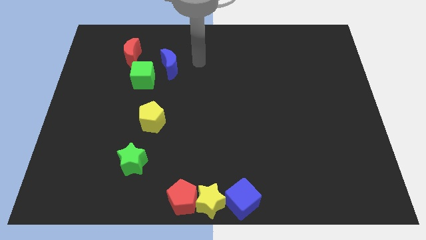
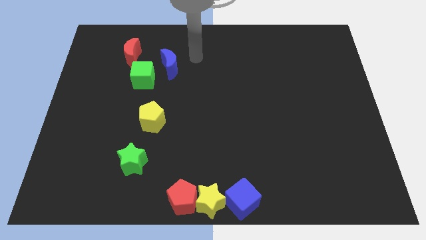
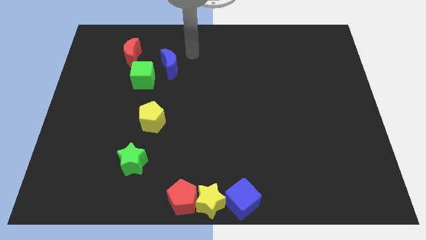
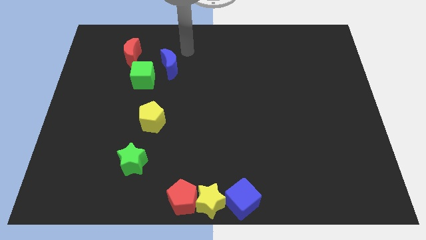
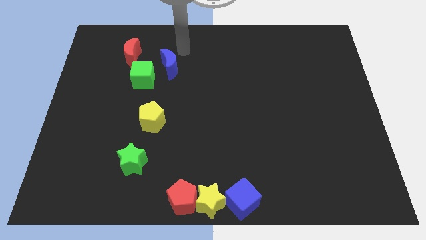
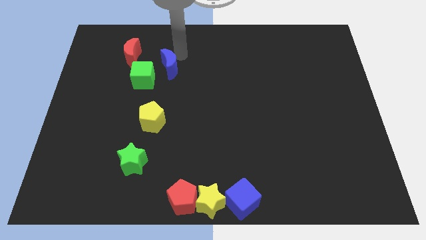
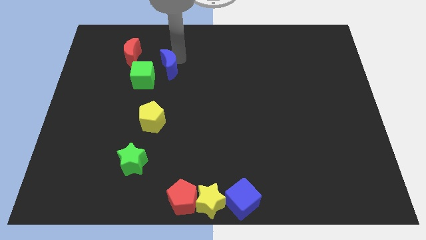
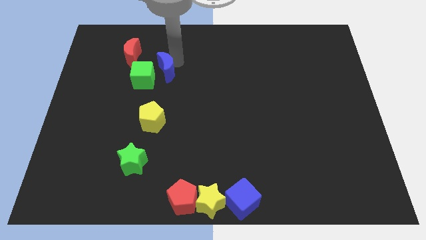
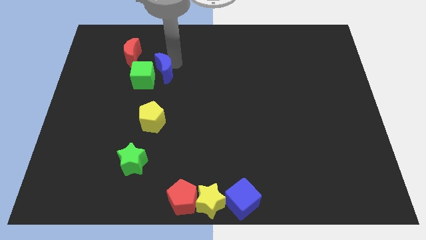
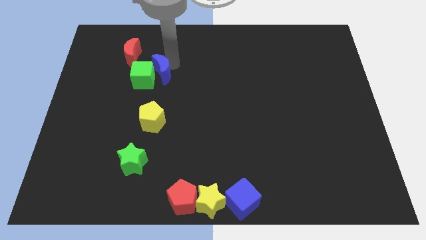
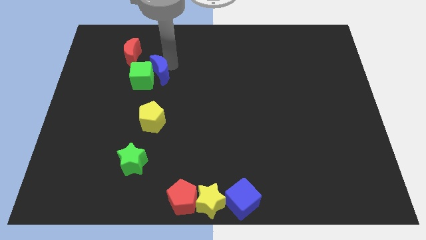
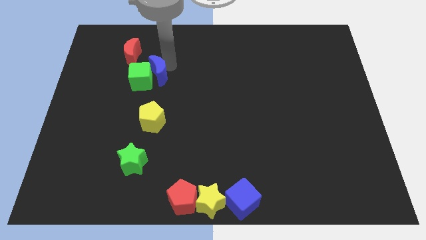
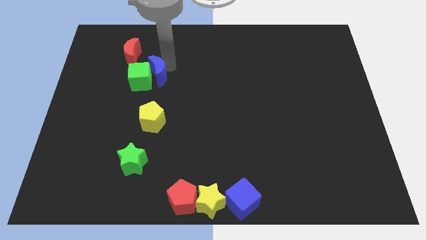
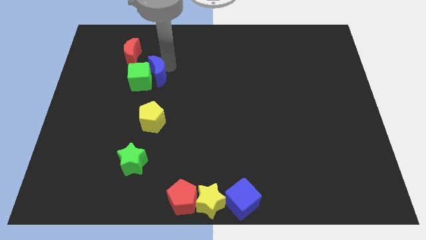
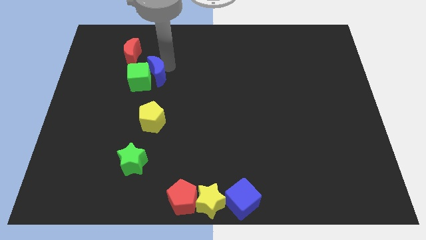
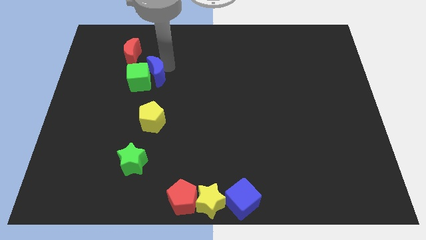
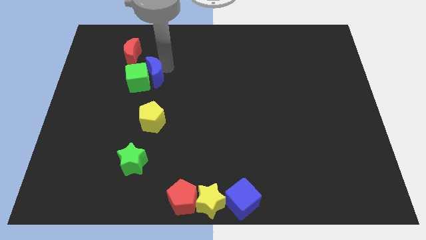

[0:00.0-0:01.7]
push the blue crescent in the green cube

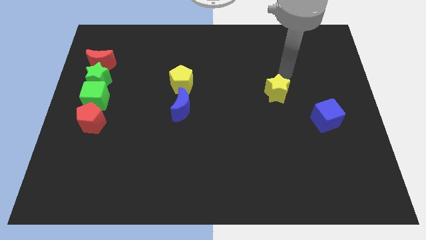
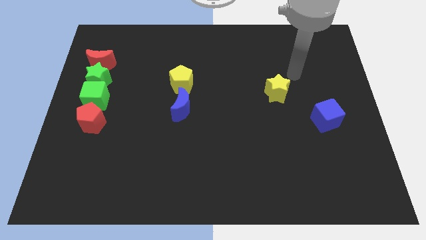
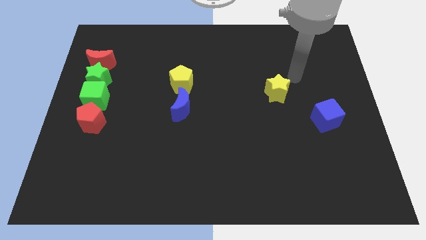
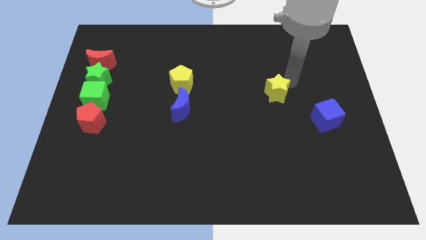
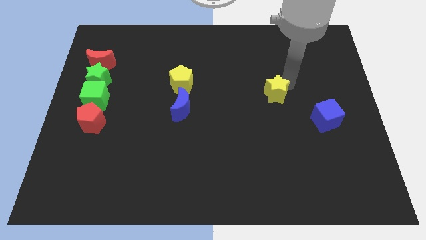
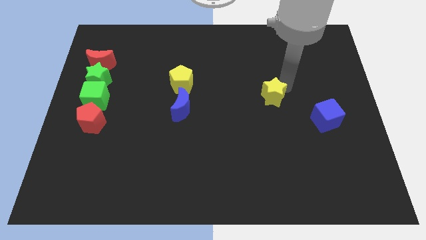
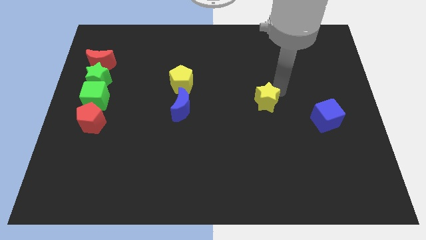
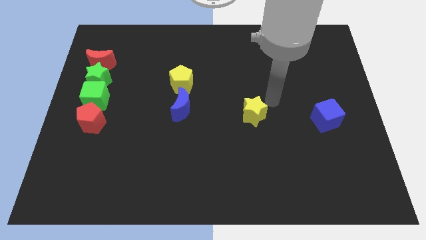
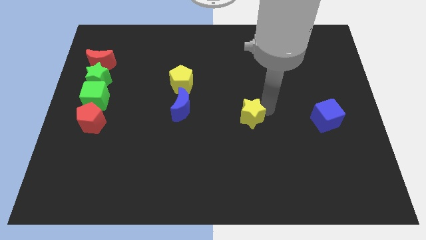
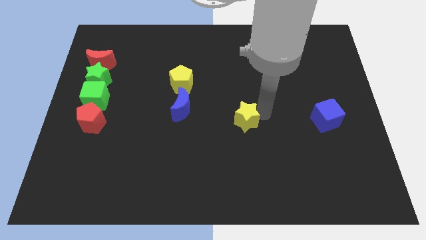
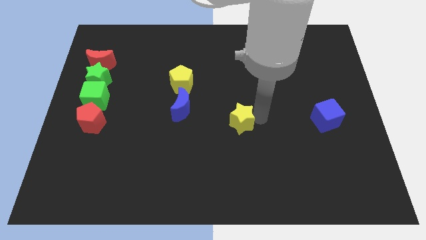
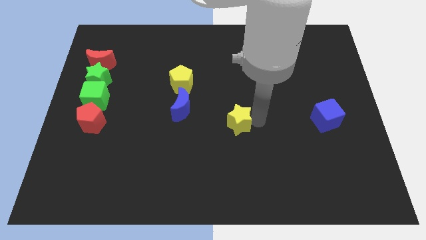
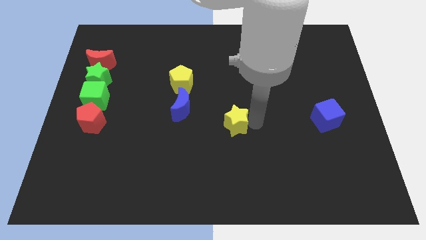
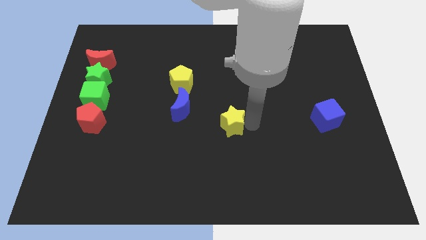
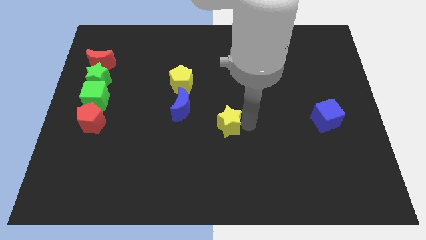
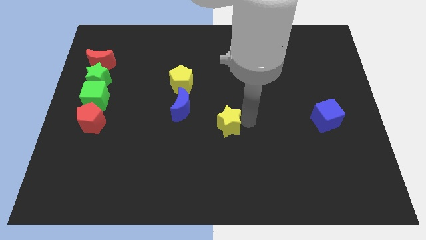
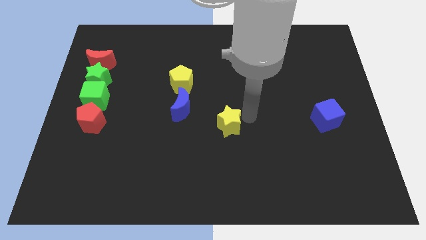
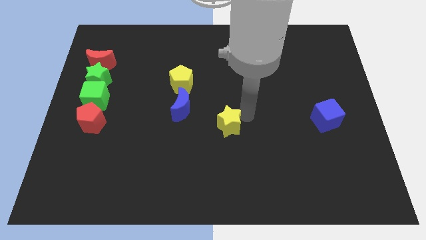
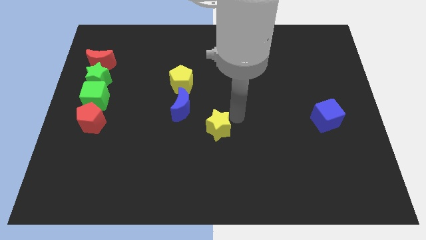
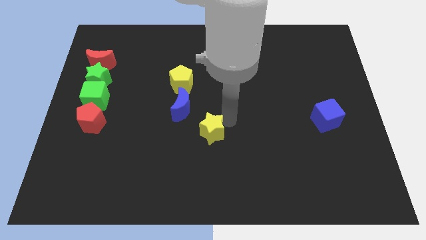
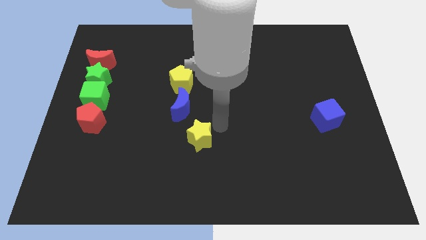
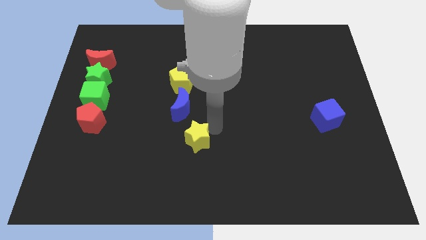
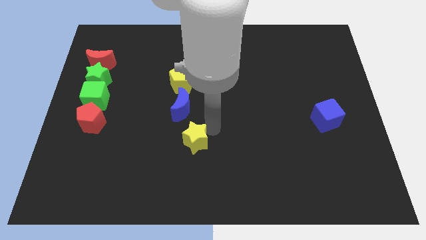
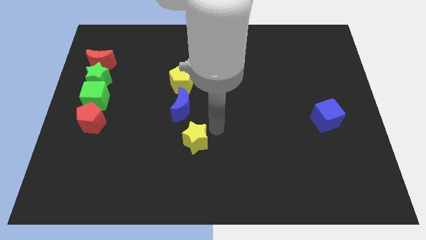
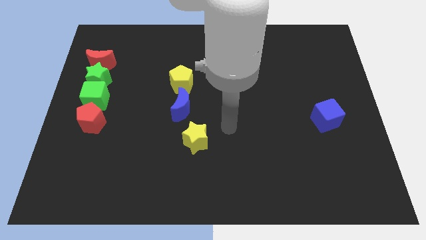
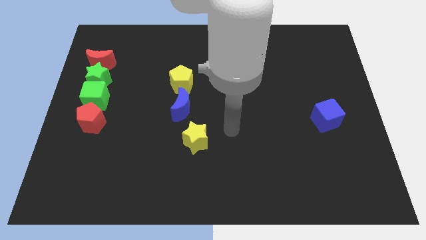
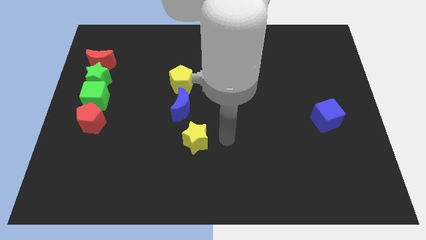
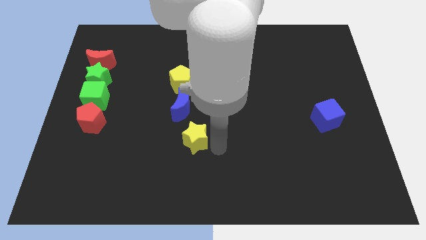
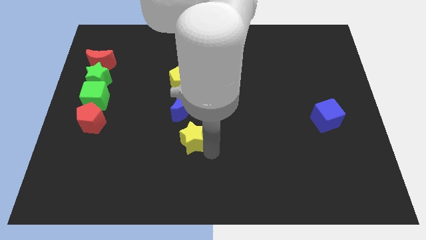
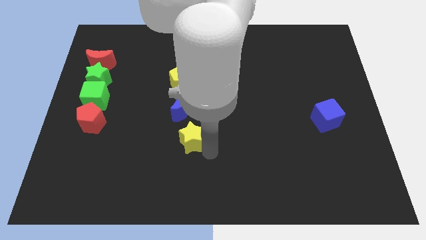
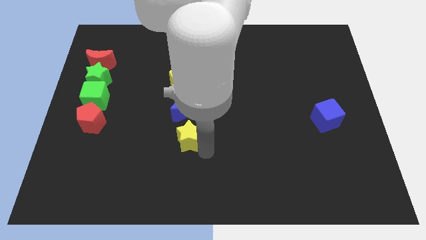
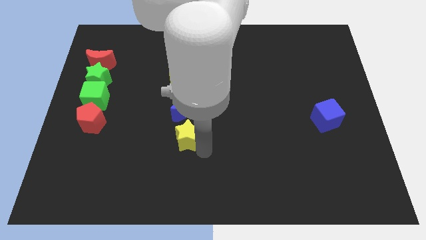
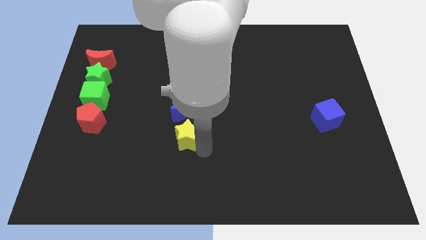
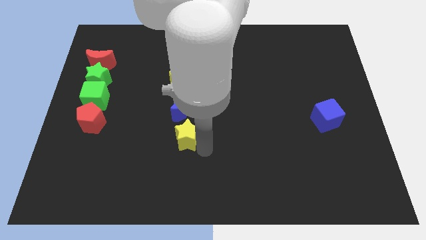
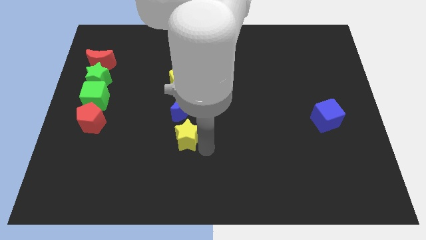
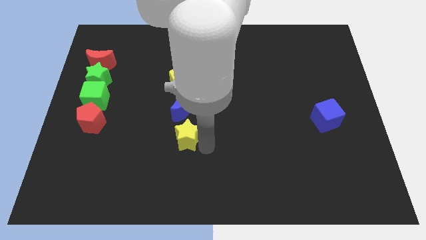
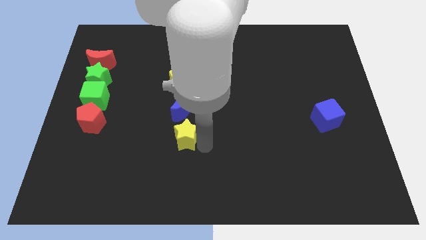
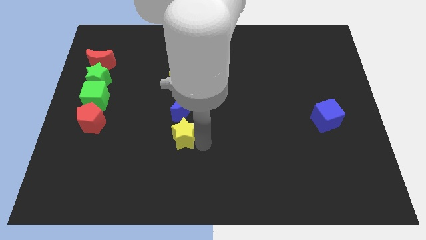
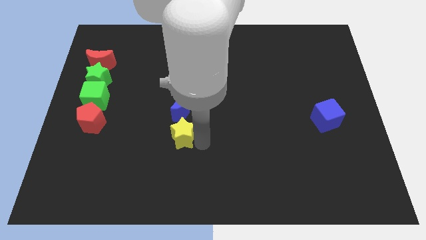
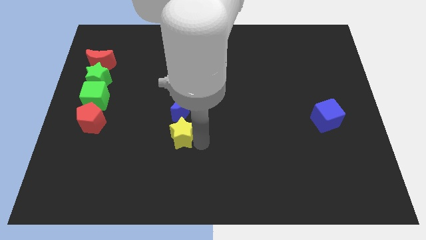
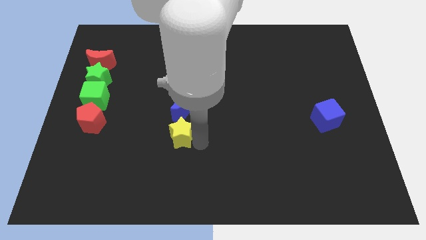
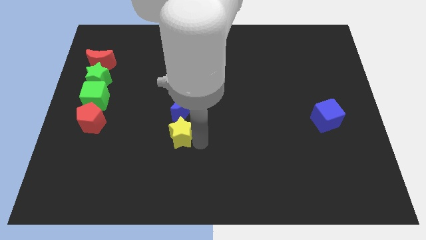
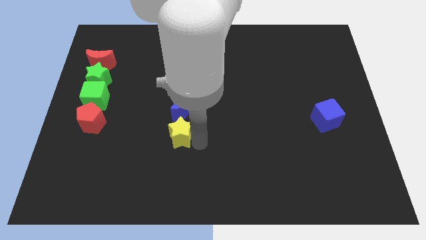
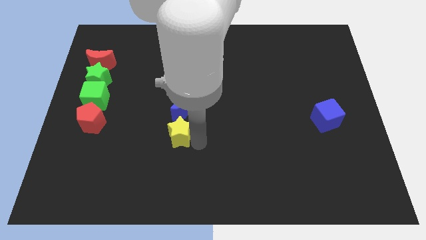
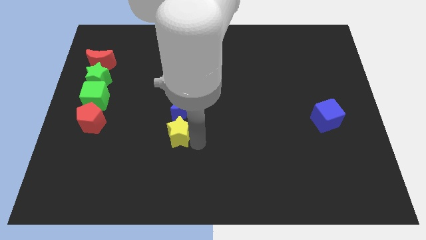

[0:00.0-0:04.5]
place yellow star below blue crescent

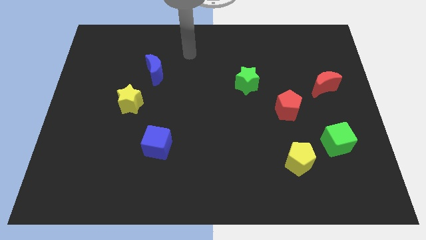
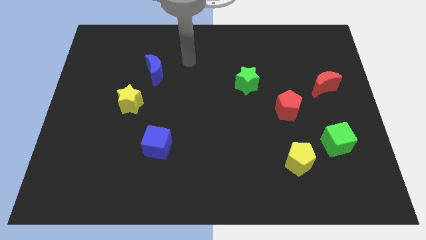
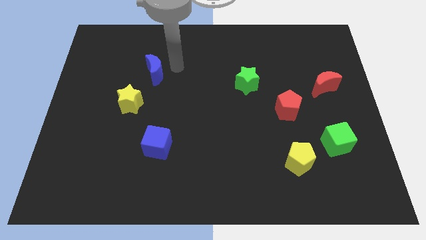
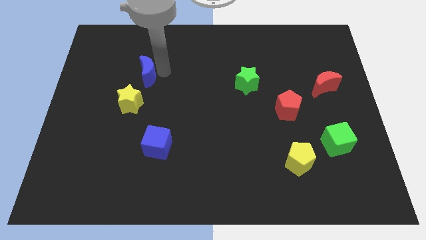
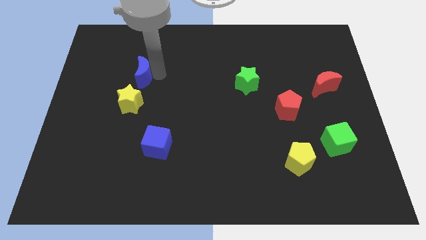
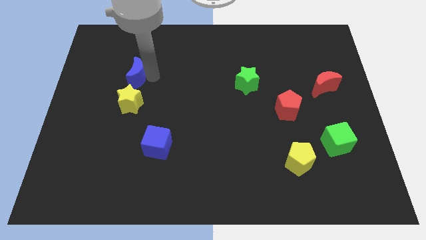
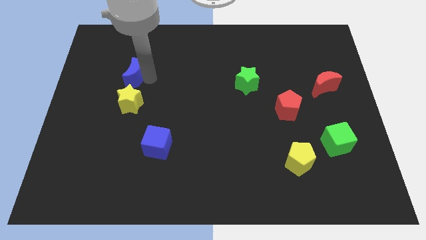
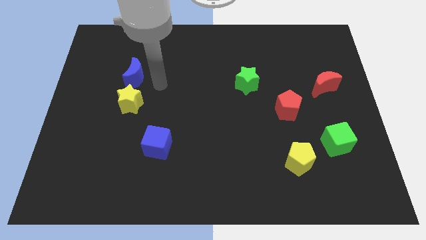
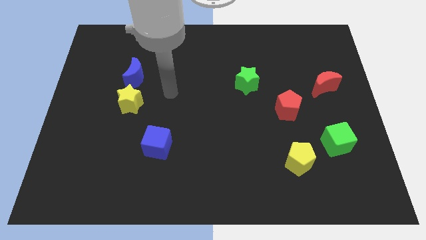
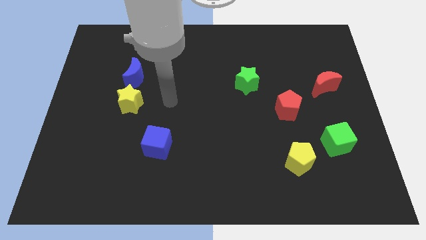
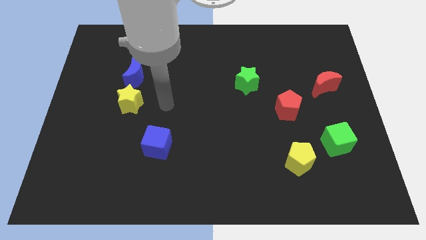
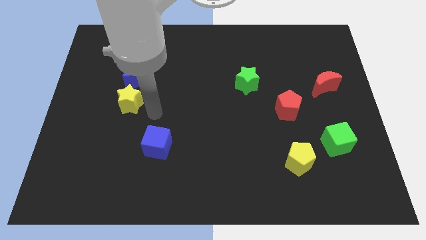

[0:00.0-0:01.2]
place the blue moon at the top of the yellow star

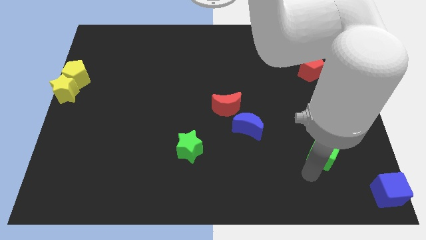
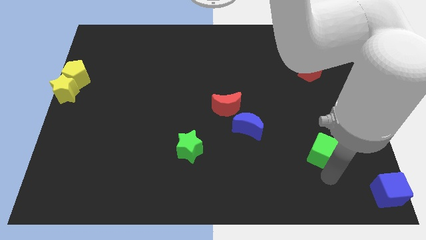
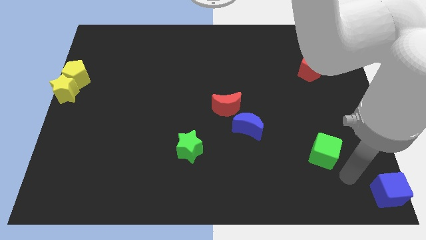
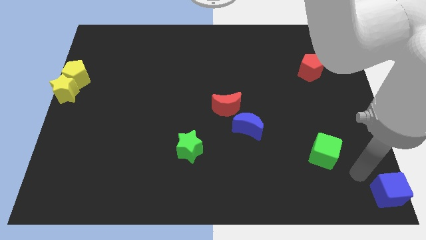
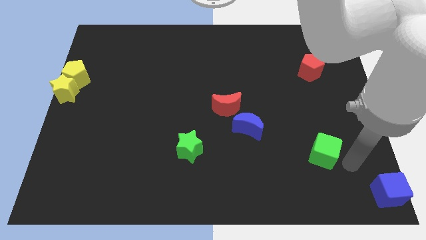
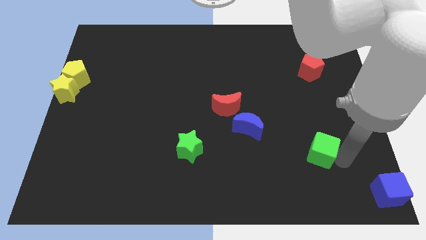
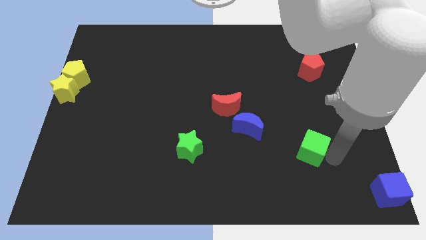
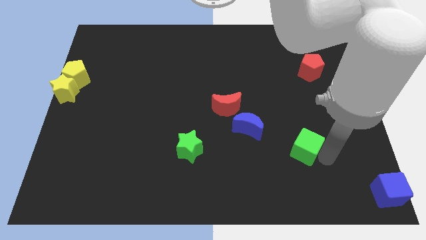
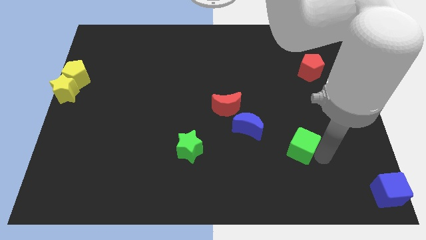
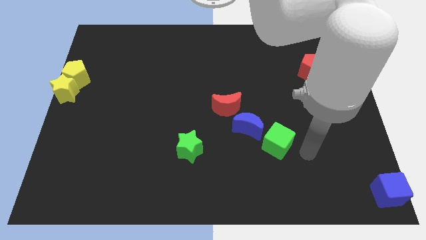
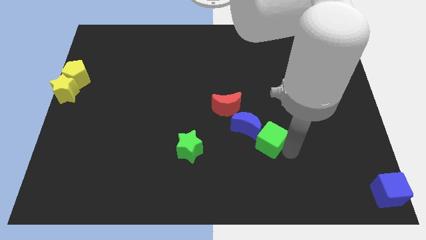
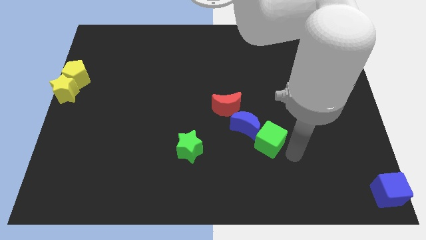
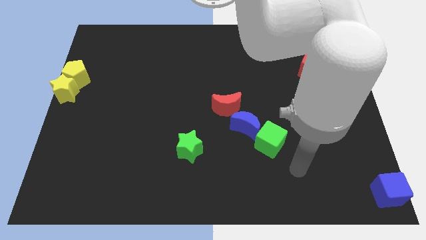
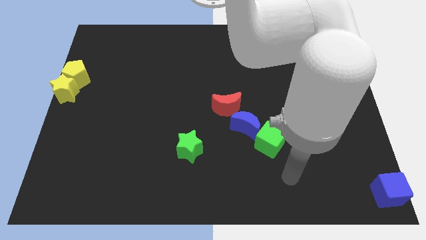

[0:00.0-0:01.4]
push the green cube into the blue moon

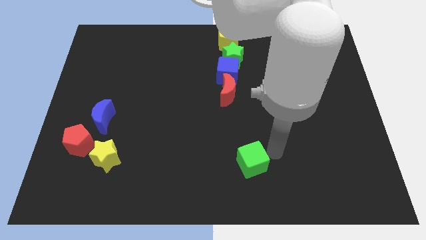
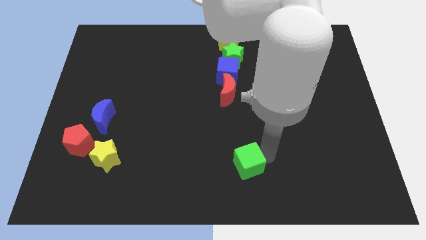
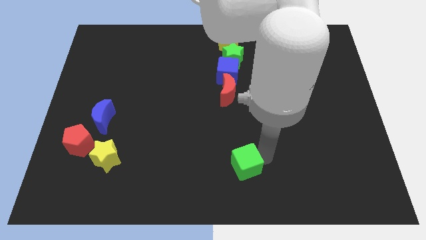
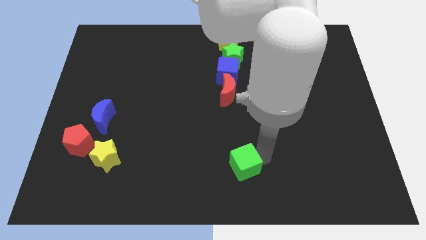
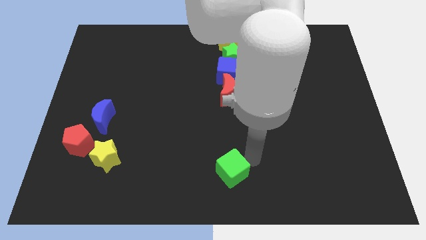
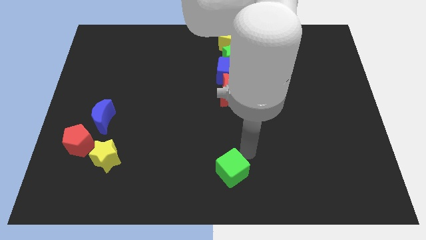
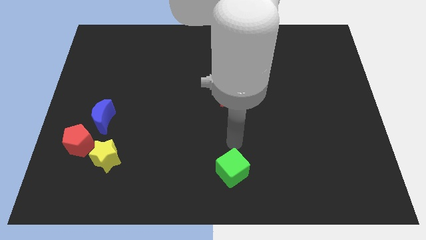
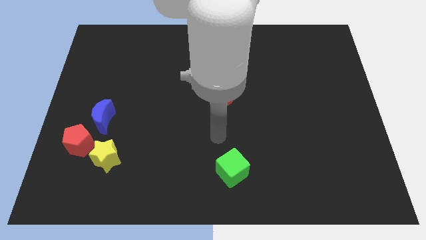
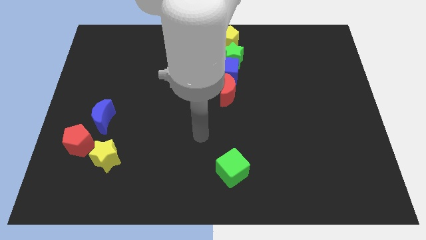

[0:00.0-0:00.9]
move the green cube vertical to red moon
